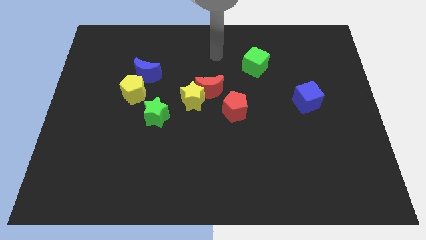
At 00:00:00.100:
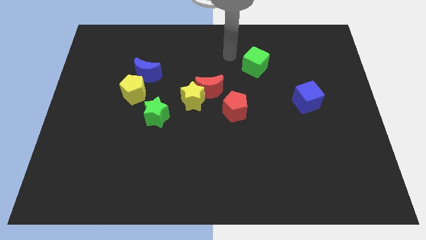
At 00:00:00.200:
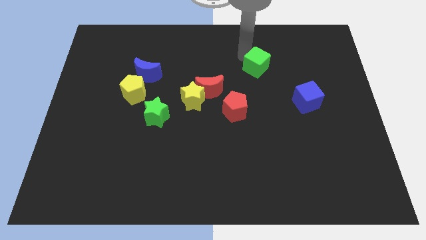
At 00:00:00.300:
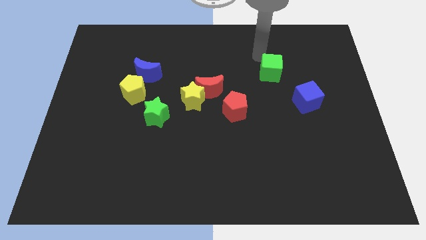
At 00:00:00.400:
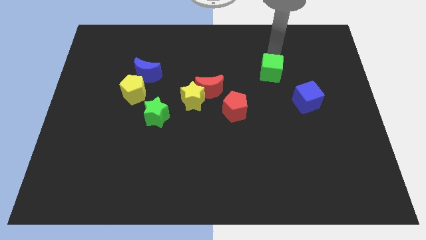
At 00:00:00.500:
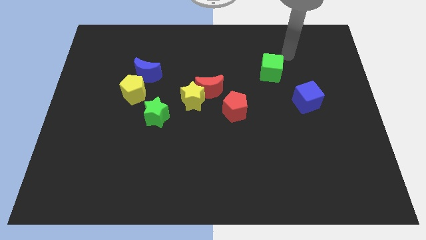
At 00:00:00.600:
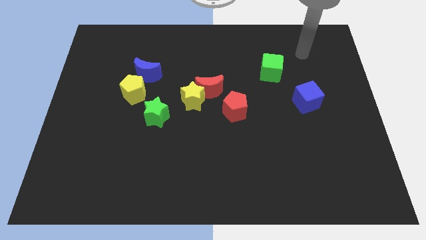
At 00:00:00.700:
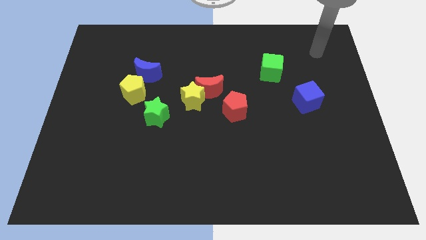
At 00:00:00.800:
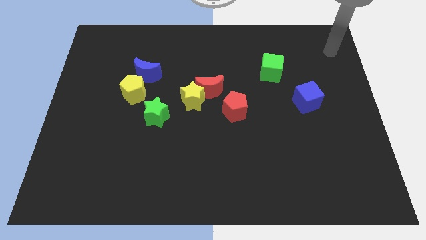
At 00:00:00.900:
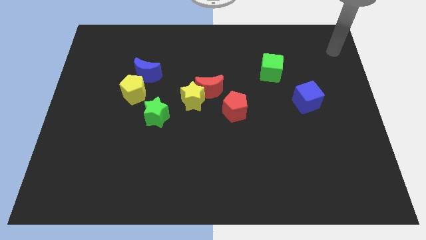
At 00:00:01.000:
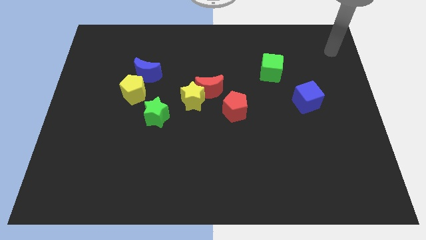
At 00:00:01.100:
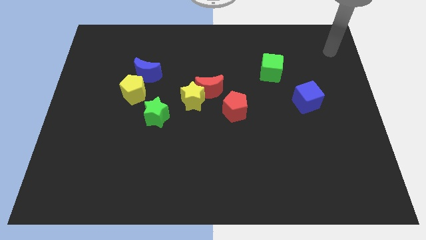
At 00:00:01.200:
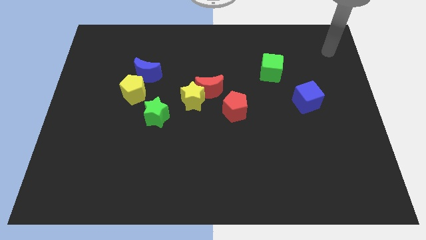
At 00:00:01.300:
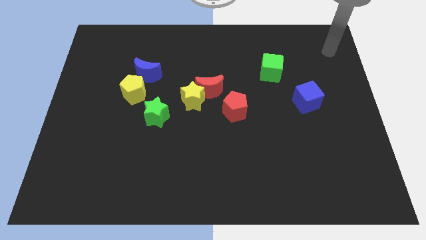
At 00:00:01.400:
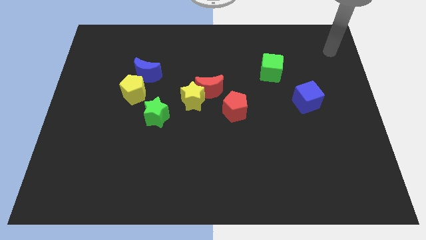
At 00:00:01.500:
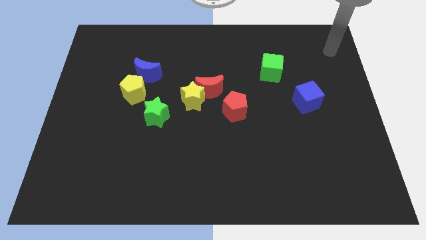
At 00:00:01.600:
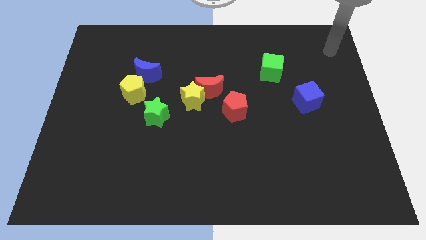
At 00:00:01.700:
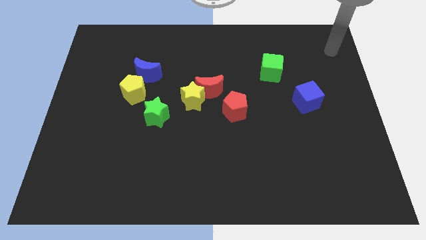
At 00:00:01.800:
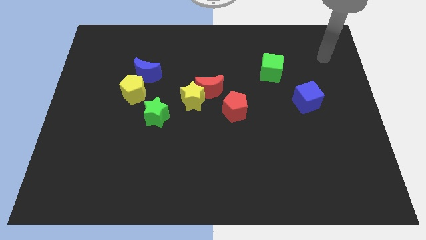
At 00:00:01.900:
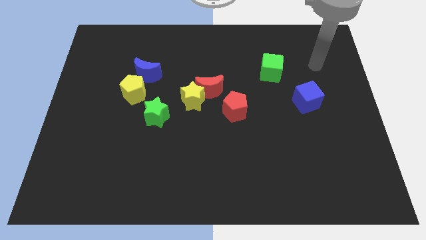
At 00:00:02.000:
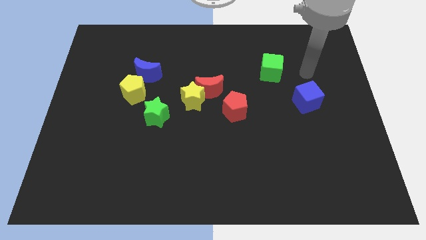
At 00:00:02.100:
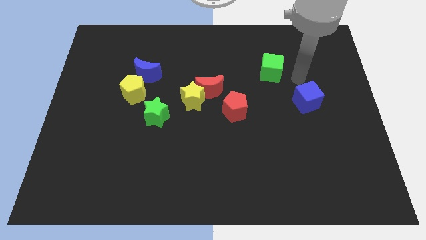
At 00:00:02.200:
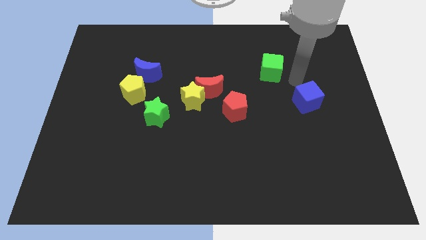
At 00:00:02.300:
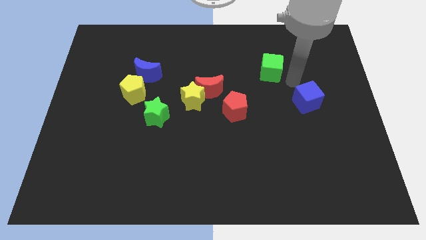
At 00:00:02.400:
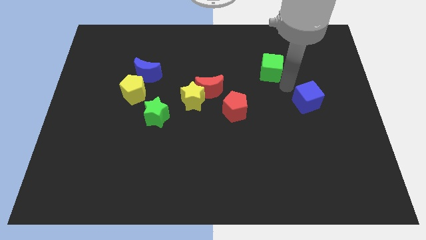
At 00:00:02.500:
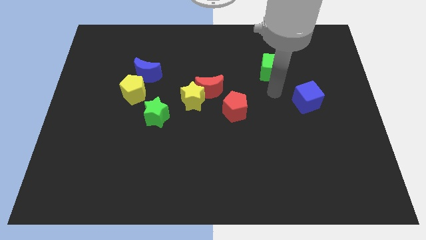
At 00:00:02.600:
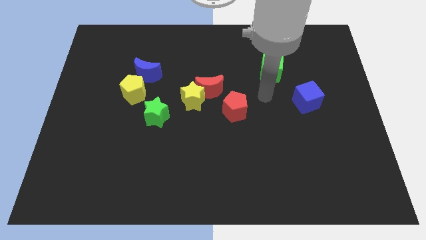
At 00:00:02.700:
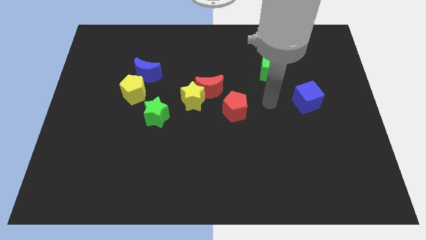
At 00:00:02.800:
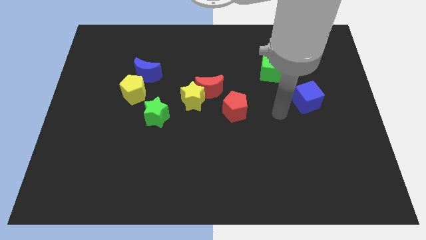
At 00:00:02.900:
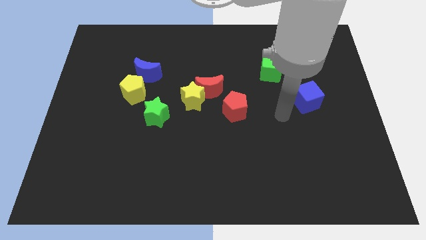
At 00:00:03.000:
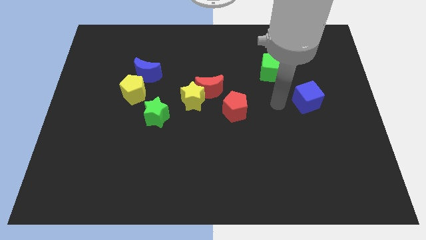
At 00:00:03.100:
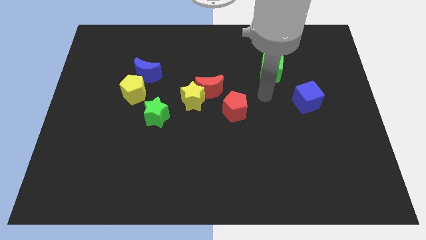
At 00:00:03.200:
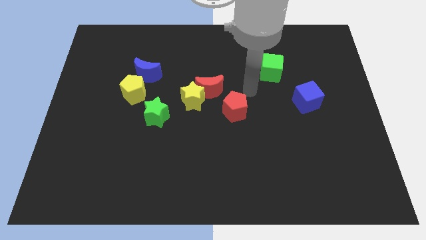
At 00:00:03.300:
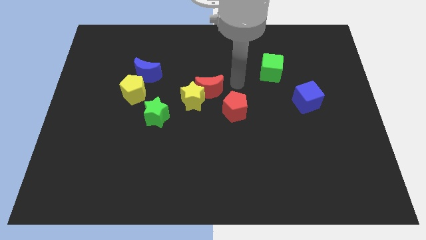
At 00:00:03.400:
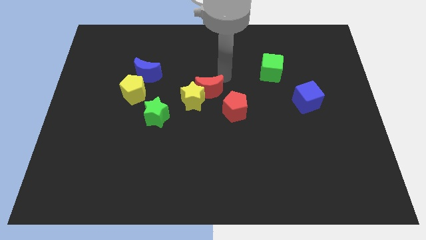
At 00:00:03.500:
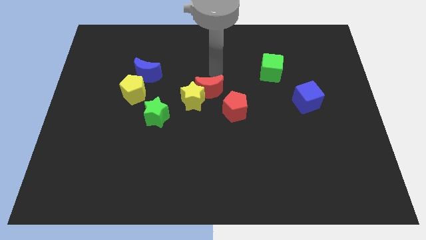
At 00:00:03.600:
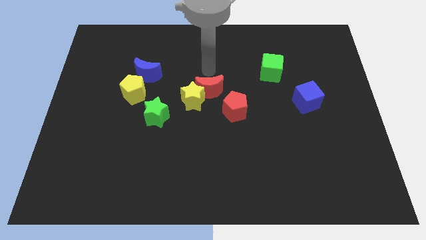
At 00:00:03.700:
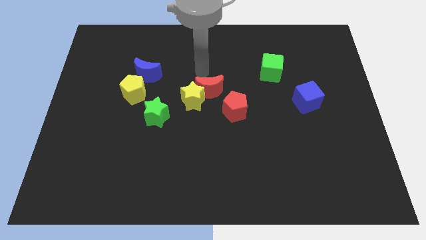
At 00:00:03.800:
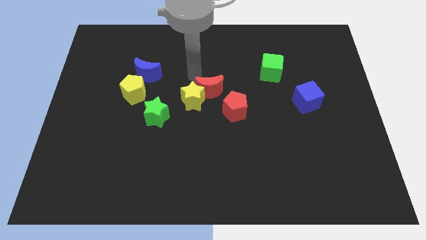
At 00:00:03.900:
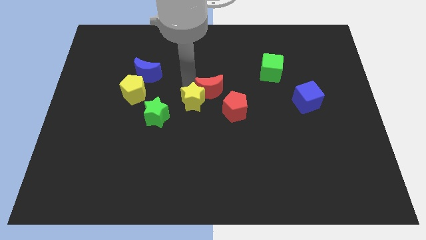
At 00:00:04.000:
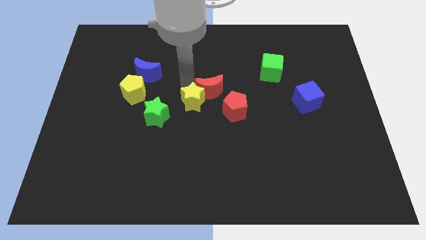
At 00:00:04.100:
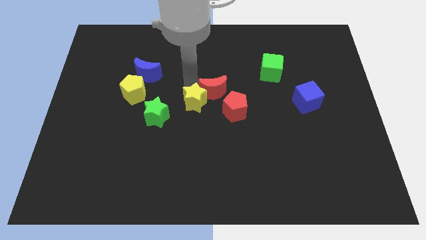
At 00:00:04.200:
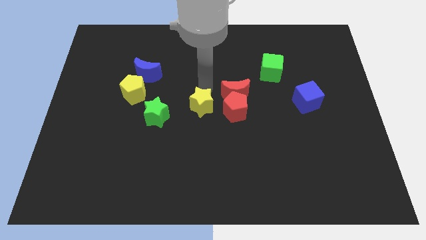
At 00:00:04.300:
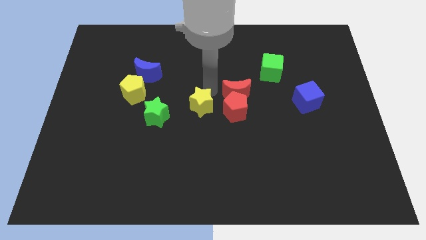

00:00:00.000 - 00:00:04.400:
separate the red crescent from the yellow star

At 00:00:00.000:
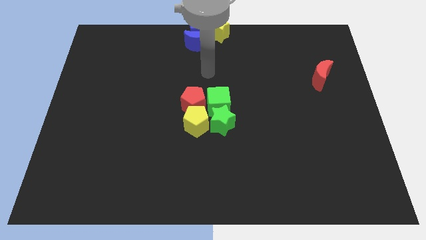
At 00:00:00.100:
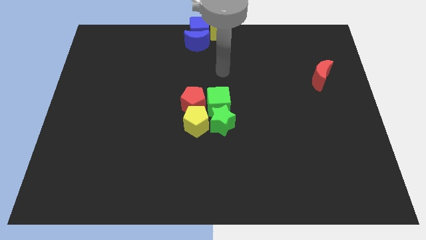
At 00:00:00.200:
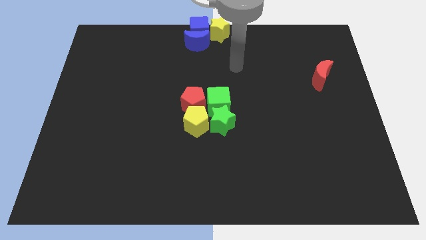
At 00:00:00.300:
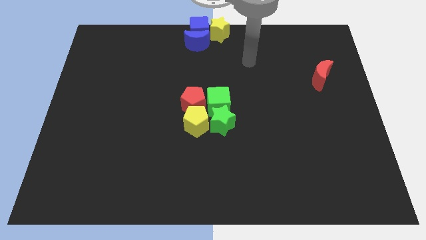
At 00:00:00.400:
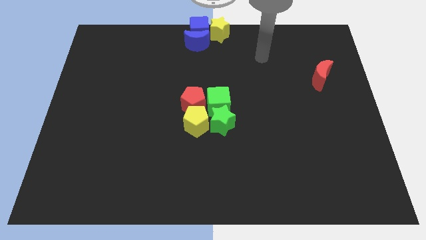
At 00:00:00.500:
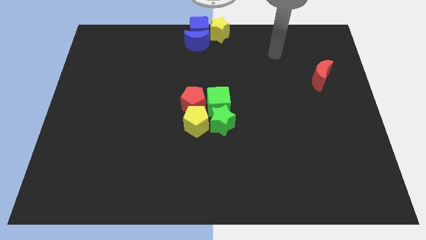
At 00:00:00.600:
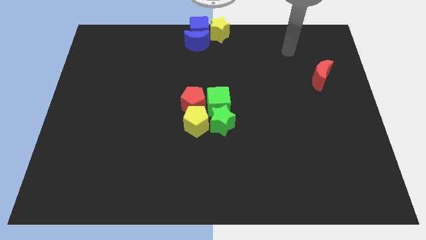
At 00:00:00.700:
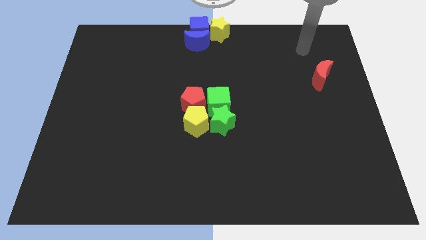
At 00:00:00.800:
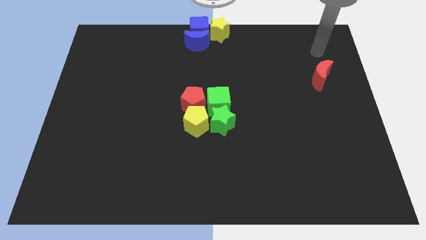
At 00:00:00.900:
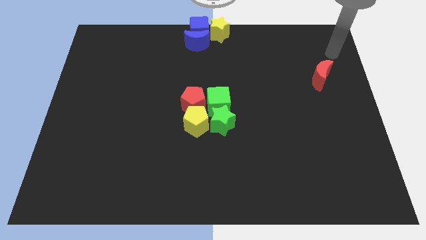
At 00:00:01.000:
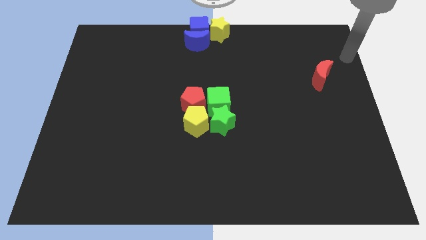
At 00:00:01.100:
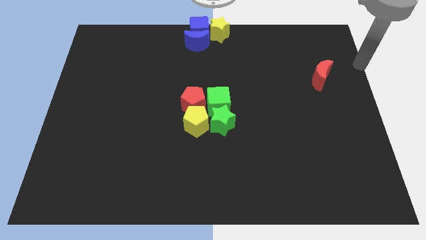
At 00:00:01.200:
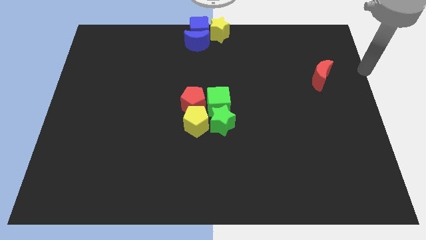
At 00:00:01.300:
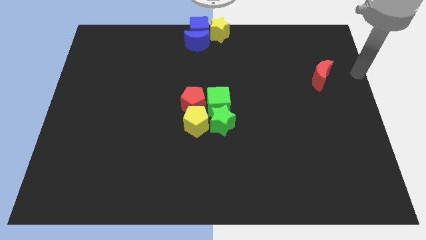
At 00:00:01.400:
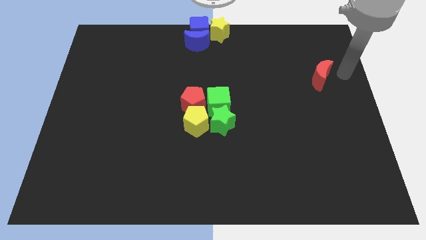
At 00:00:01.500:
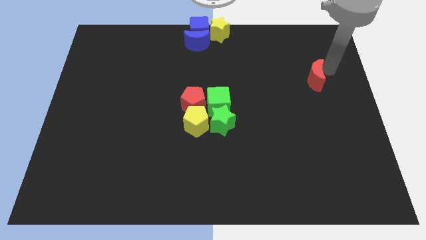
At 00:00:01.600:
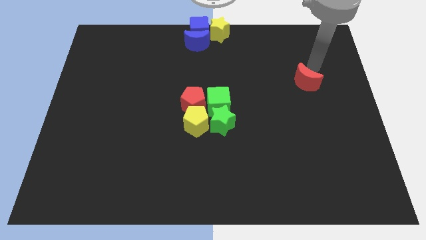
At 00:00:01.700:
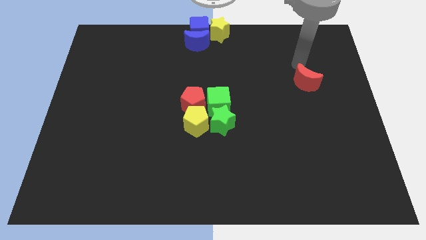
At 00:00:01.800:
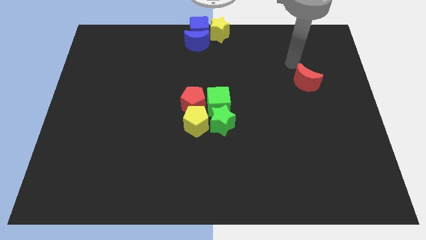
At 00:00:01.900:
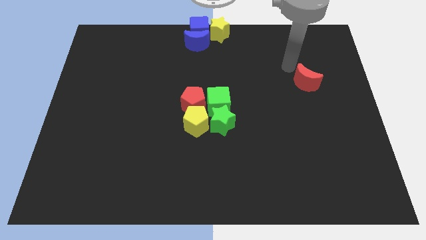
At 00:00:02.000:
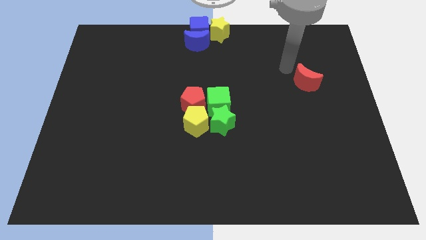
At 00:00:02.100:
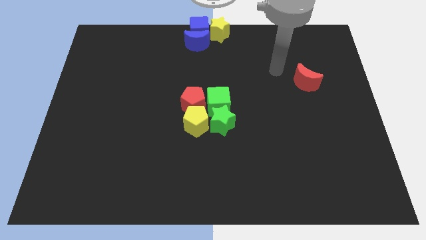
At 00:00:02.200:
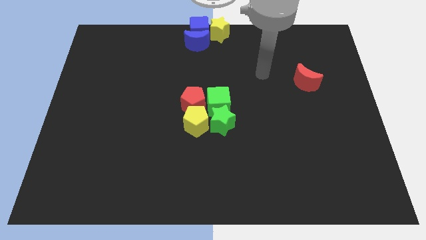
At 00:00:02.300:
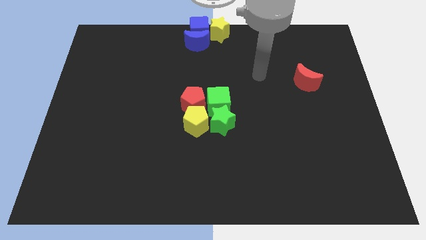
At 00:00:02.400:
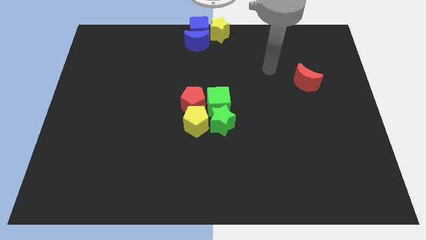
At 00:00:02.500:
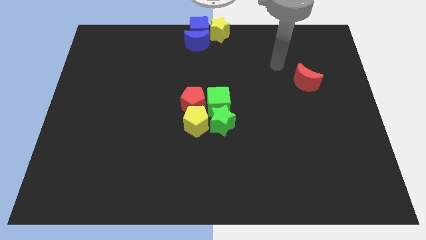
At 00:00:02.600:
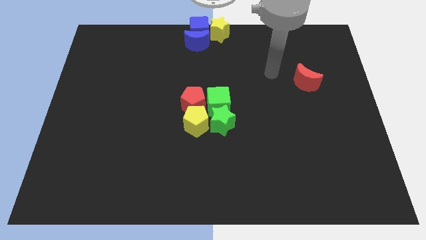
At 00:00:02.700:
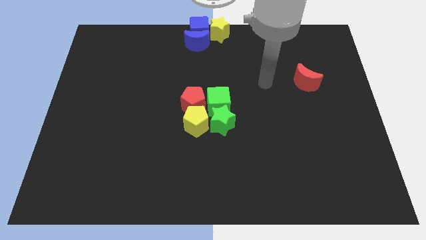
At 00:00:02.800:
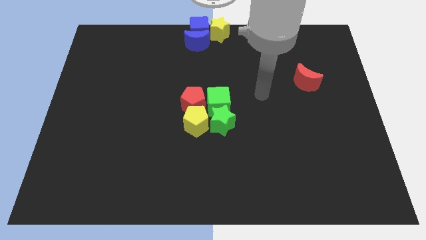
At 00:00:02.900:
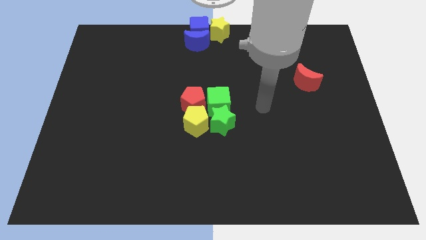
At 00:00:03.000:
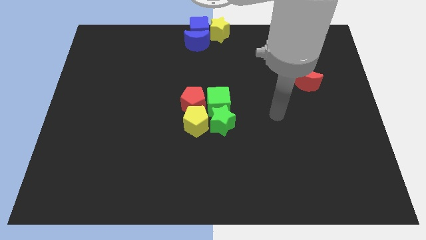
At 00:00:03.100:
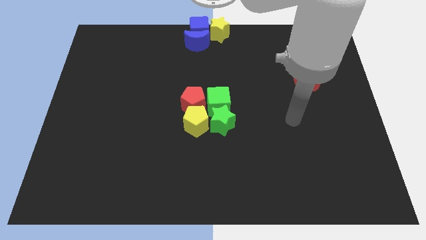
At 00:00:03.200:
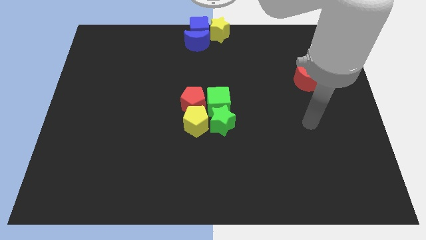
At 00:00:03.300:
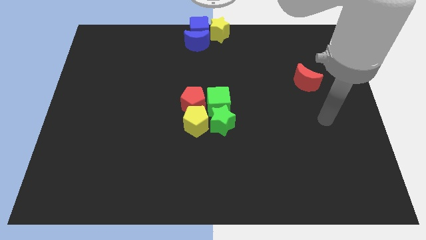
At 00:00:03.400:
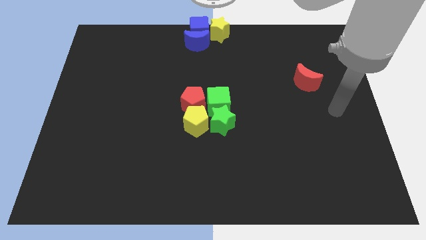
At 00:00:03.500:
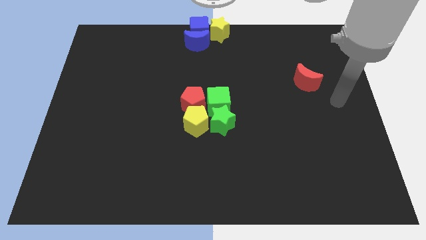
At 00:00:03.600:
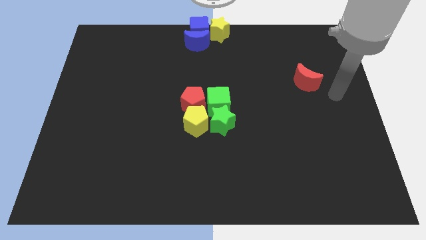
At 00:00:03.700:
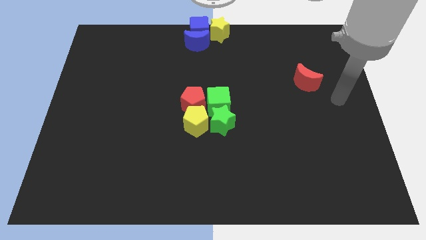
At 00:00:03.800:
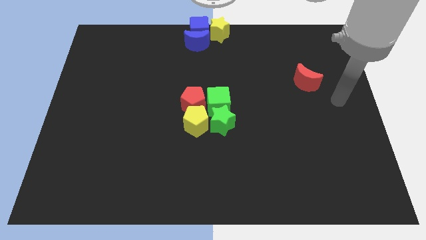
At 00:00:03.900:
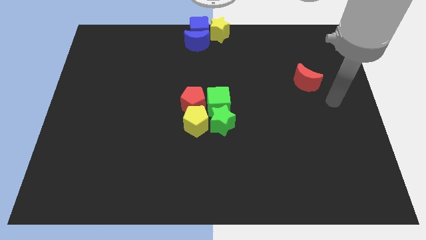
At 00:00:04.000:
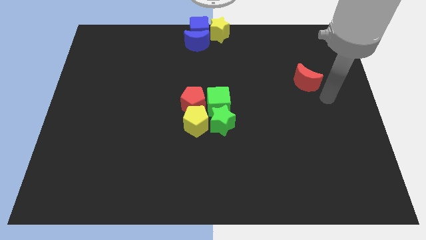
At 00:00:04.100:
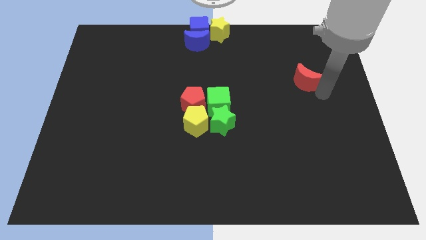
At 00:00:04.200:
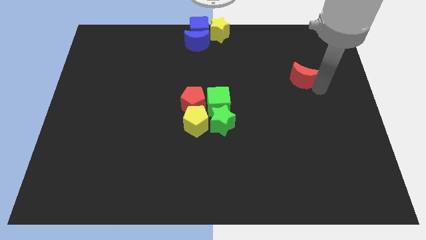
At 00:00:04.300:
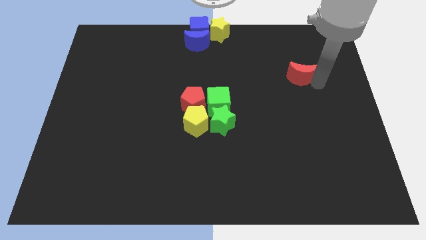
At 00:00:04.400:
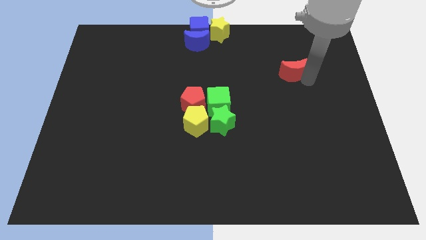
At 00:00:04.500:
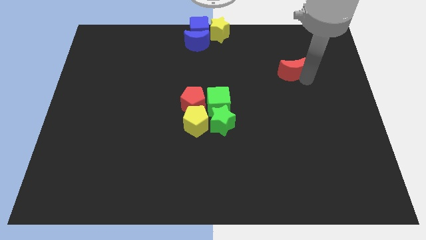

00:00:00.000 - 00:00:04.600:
push the red crescent to the top of the board
